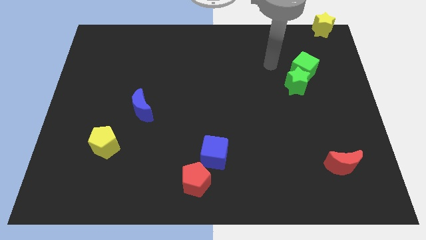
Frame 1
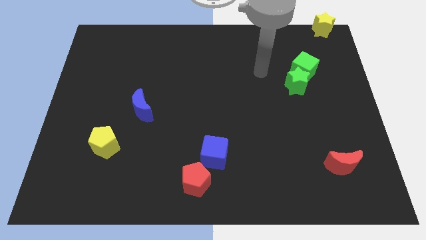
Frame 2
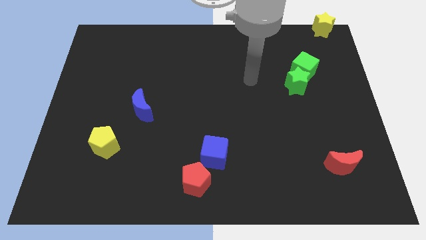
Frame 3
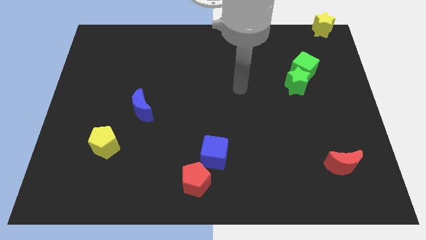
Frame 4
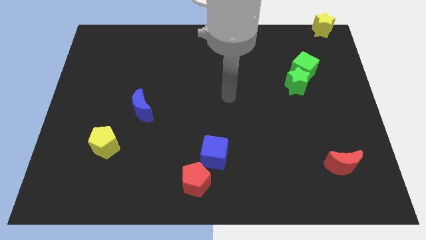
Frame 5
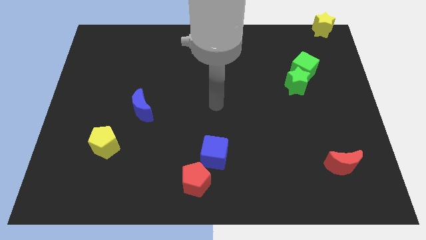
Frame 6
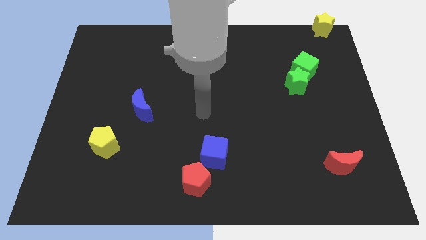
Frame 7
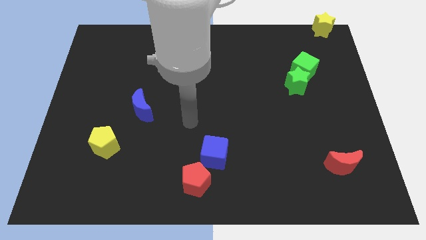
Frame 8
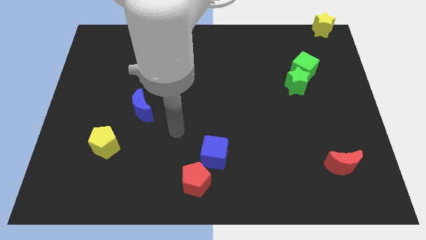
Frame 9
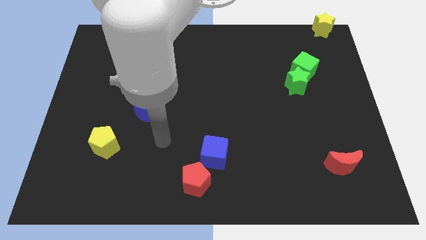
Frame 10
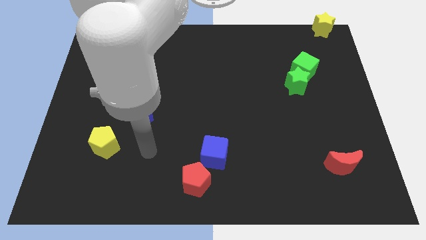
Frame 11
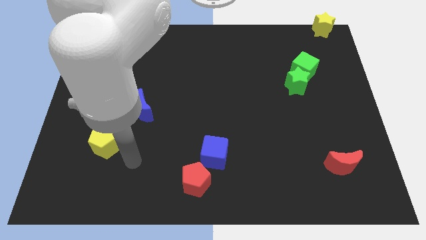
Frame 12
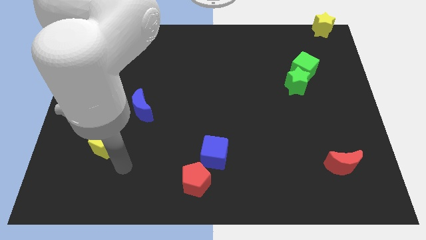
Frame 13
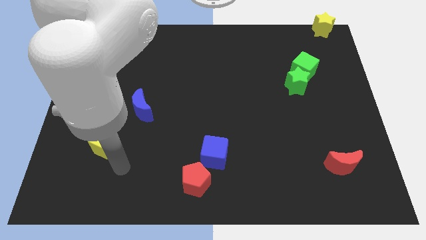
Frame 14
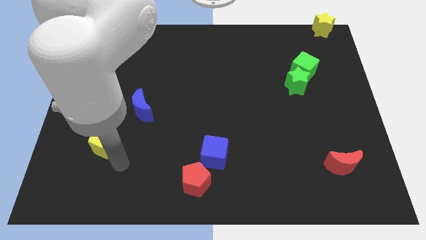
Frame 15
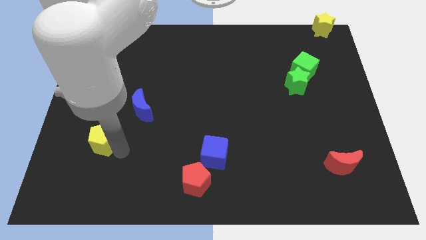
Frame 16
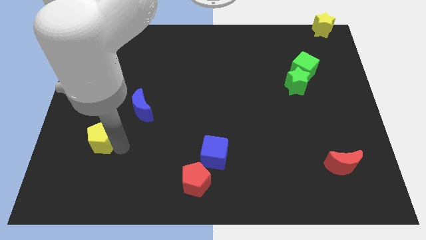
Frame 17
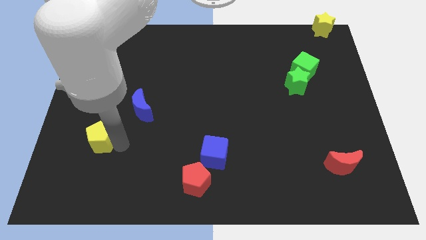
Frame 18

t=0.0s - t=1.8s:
move the yellow pentagon slightly up

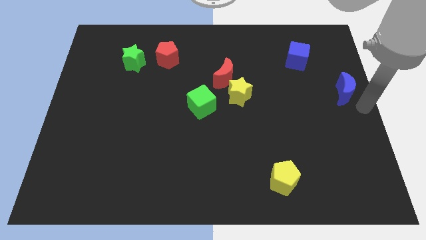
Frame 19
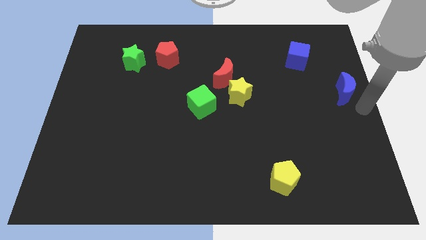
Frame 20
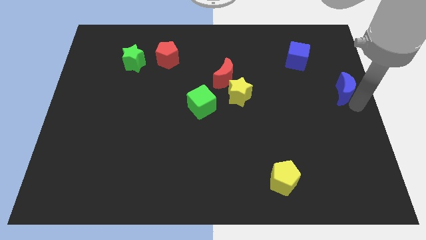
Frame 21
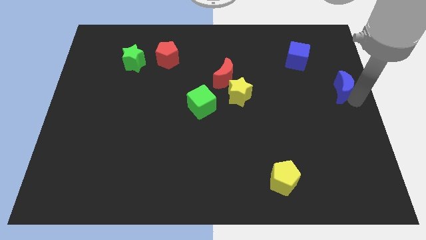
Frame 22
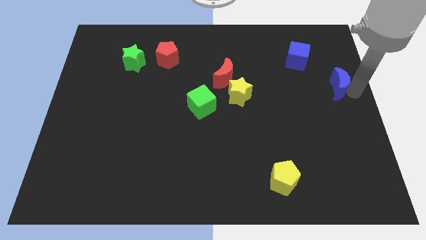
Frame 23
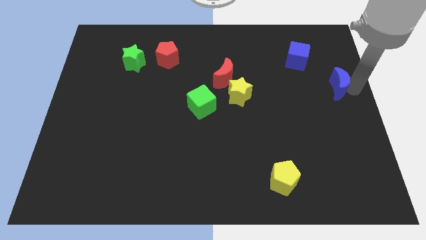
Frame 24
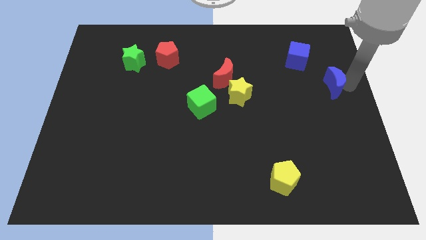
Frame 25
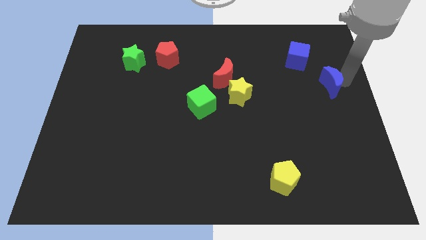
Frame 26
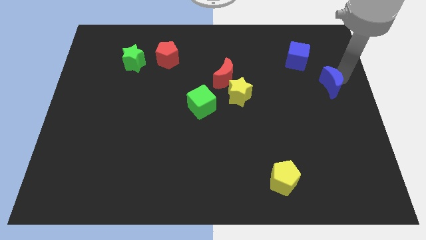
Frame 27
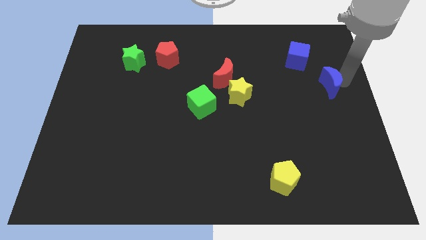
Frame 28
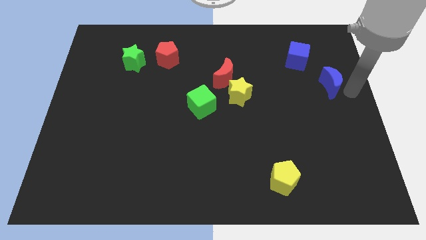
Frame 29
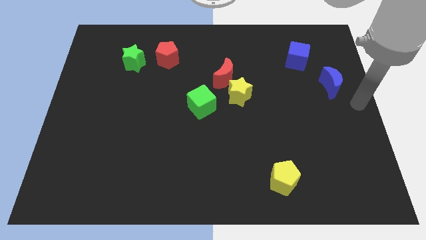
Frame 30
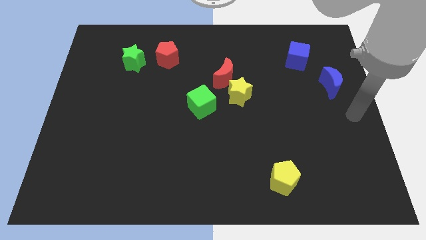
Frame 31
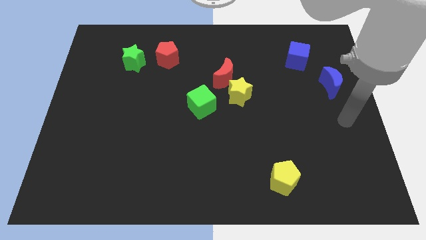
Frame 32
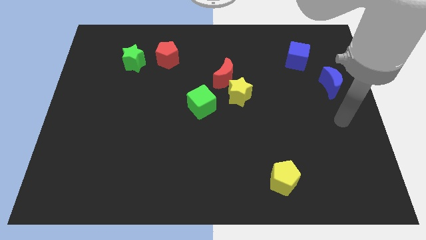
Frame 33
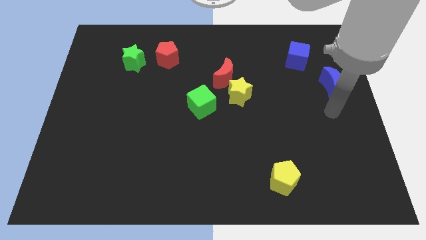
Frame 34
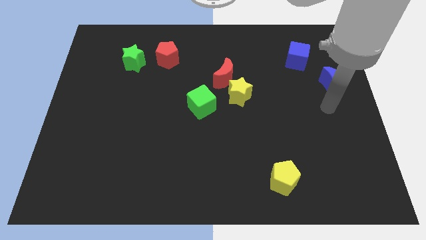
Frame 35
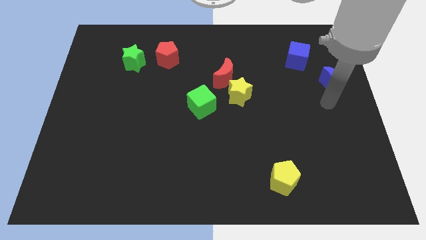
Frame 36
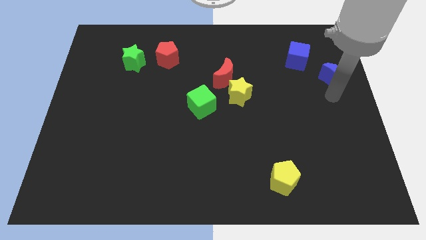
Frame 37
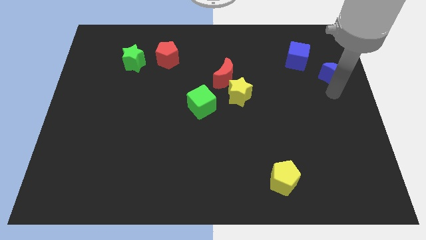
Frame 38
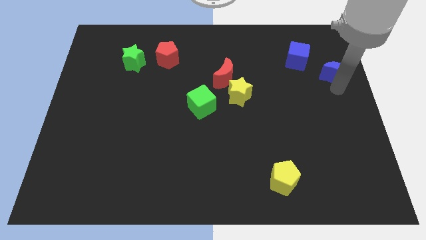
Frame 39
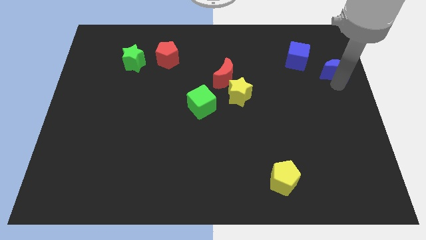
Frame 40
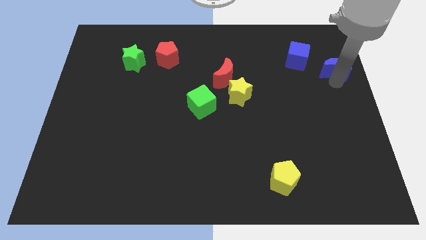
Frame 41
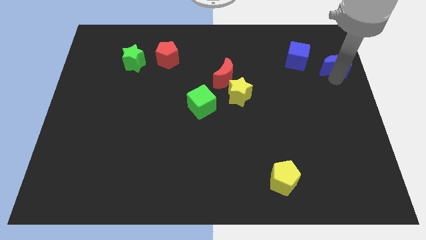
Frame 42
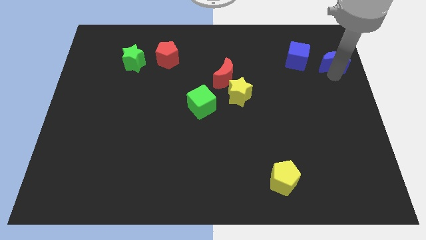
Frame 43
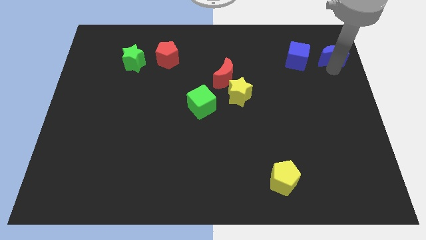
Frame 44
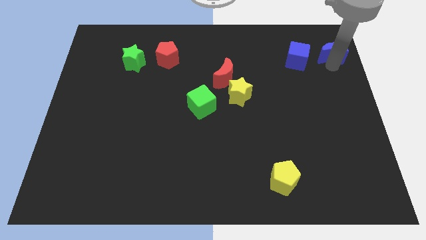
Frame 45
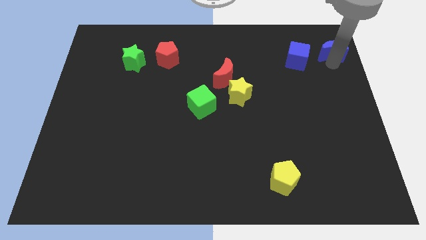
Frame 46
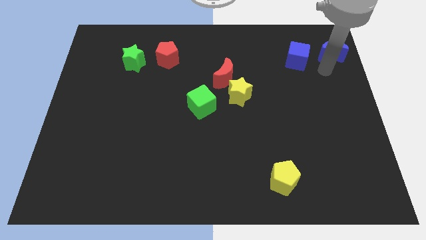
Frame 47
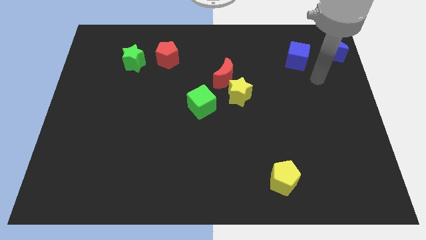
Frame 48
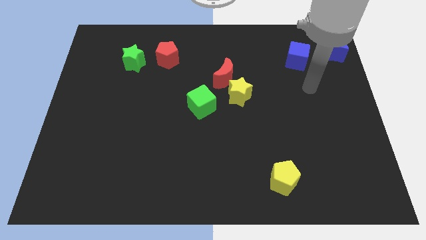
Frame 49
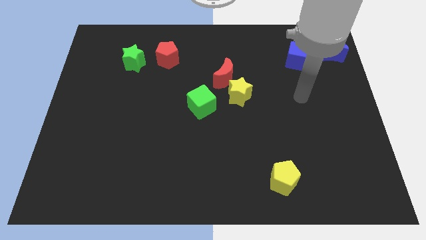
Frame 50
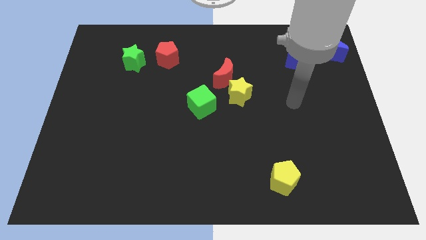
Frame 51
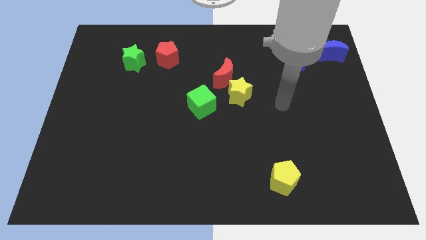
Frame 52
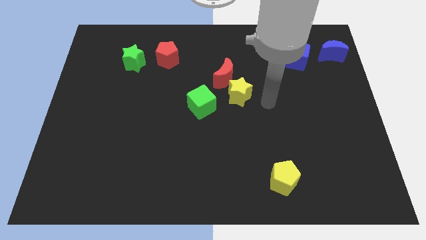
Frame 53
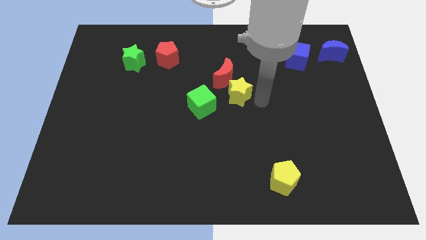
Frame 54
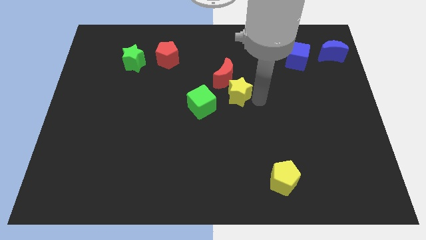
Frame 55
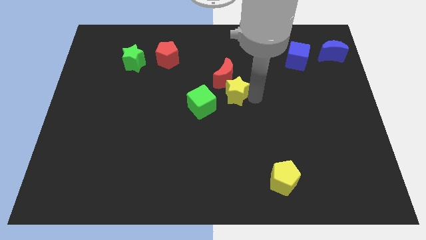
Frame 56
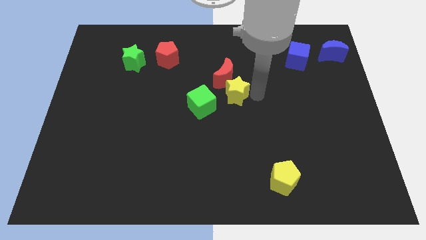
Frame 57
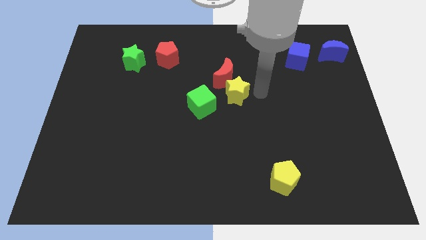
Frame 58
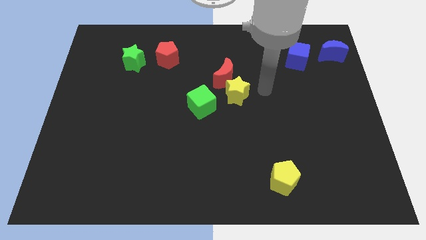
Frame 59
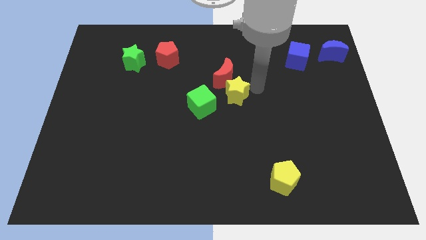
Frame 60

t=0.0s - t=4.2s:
push the blue crescent at the top right side and slightly touch the yellow star

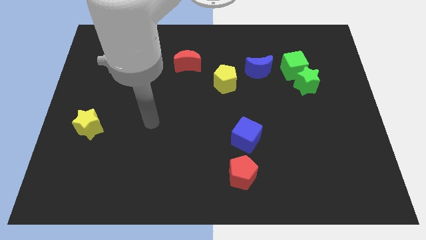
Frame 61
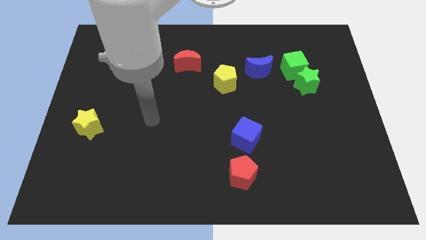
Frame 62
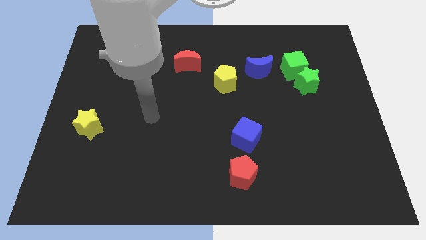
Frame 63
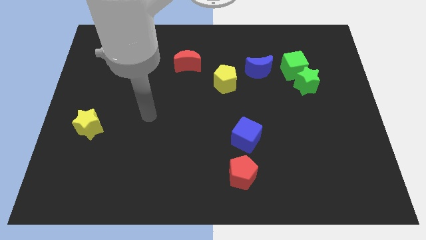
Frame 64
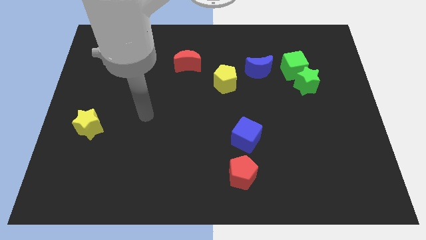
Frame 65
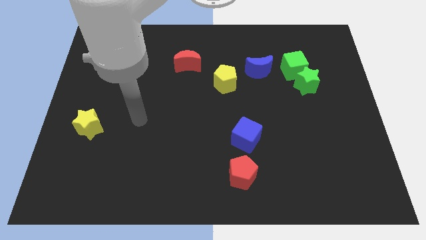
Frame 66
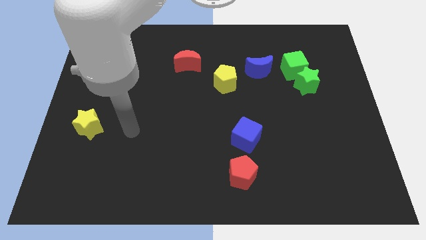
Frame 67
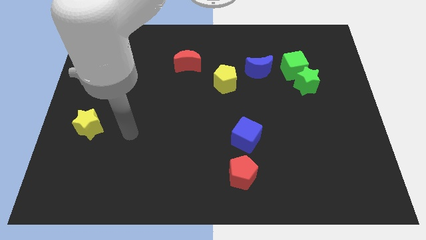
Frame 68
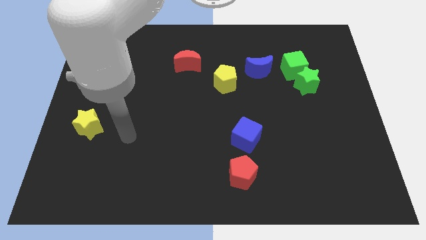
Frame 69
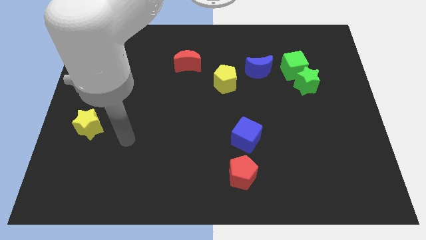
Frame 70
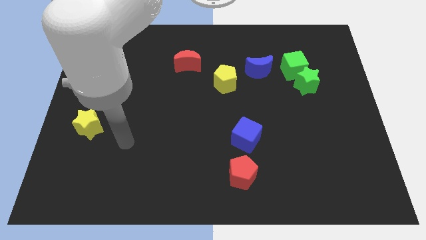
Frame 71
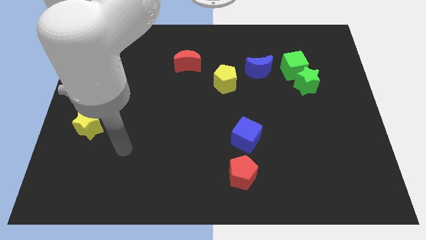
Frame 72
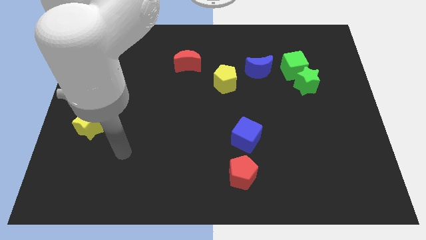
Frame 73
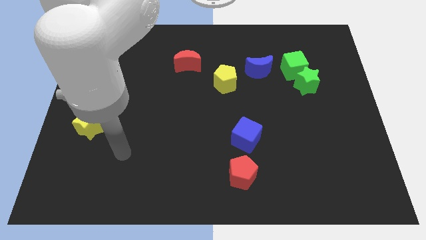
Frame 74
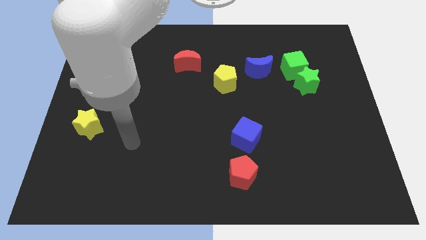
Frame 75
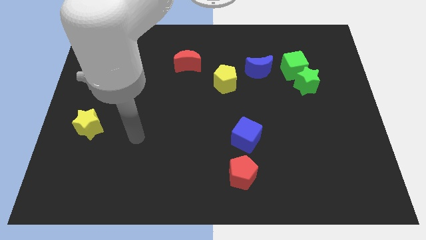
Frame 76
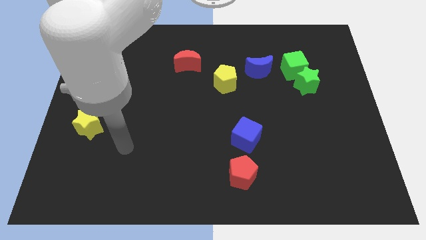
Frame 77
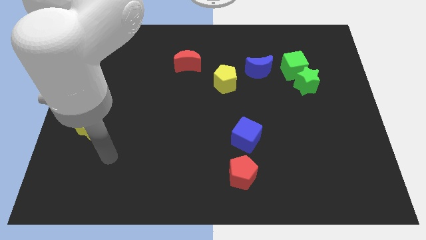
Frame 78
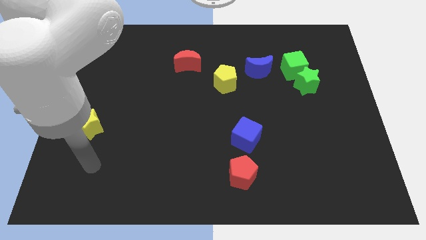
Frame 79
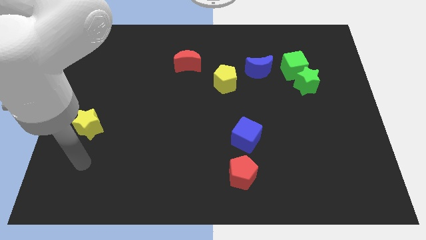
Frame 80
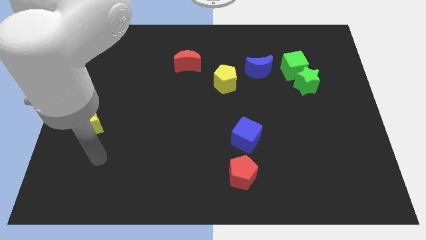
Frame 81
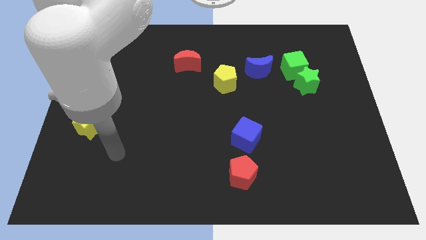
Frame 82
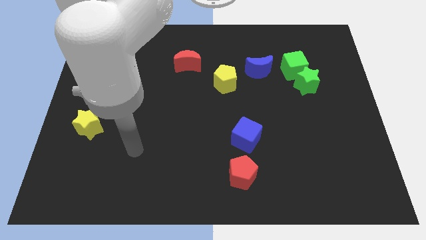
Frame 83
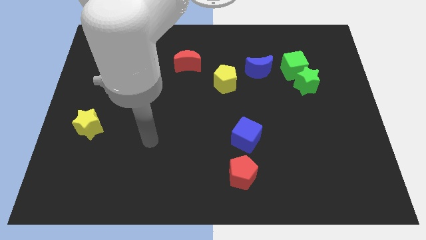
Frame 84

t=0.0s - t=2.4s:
move your arm to the center

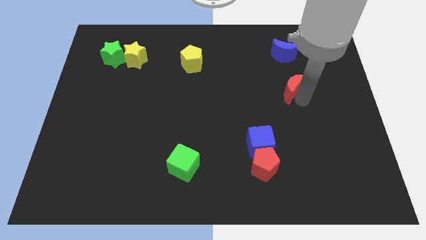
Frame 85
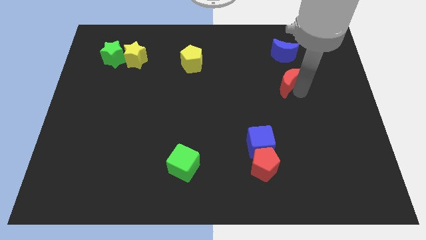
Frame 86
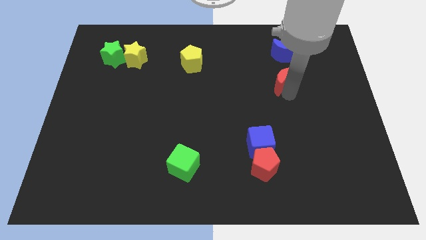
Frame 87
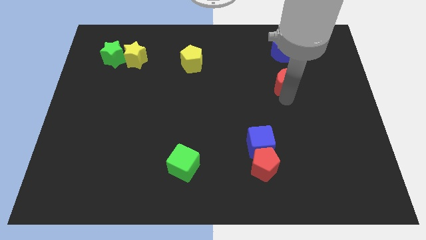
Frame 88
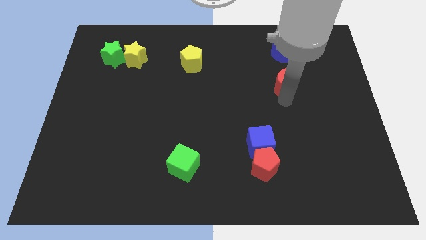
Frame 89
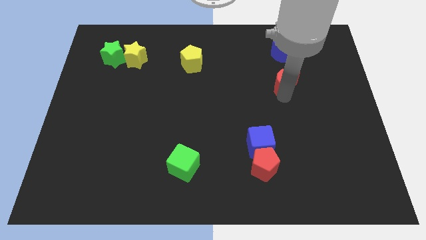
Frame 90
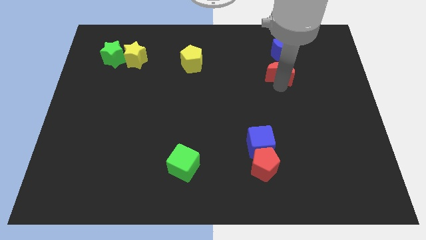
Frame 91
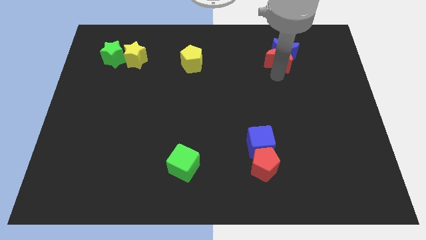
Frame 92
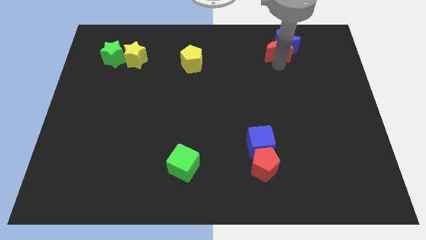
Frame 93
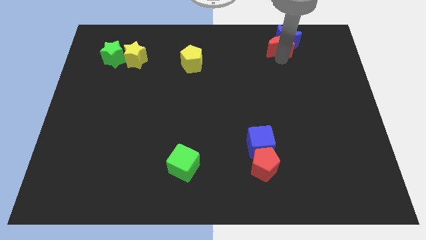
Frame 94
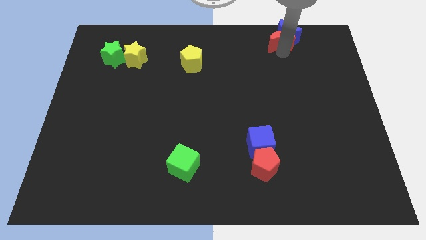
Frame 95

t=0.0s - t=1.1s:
move red moon into blue moon
